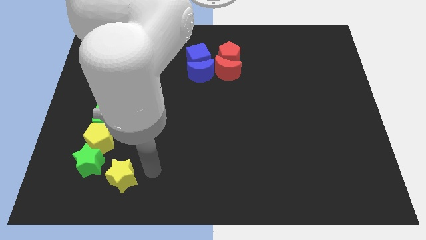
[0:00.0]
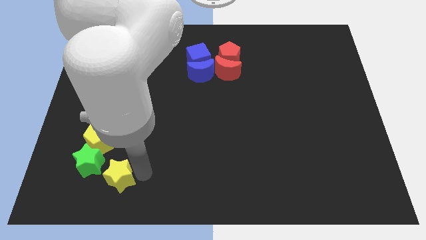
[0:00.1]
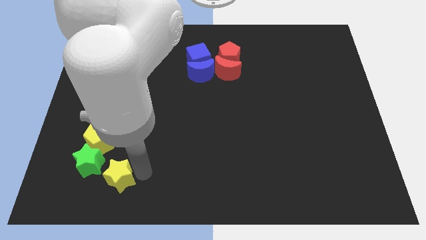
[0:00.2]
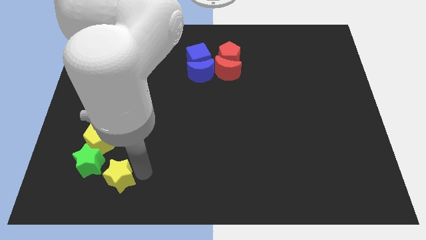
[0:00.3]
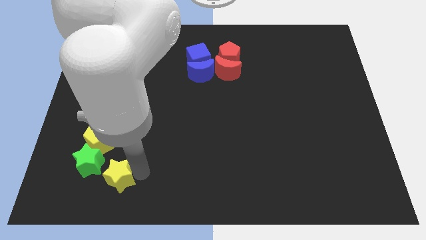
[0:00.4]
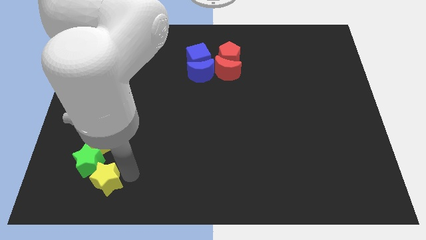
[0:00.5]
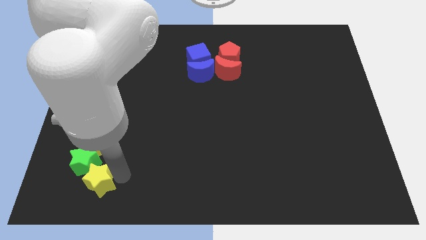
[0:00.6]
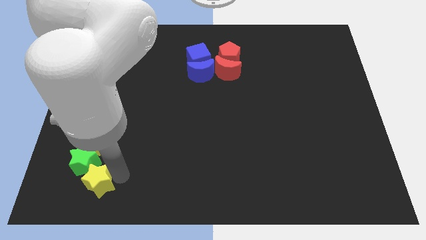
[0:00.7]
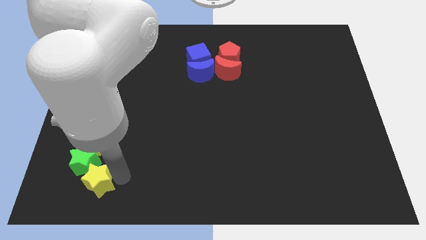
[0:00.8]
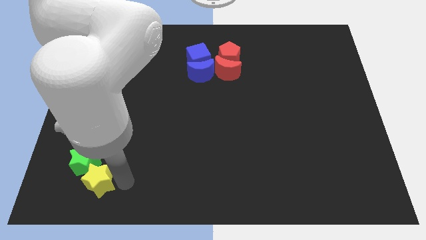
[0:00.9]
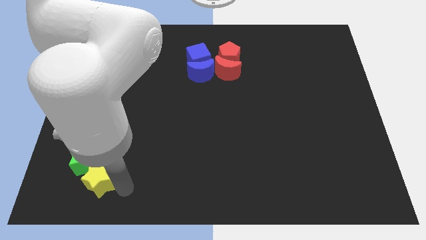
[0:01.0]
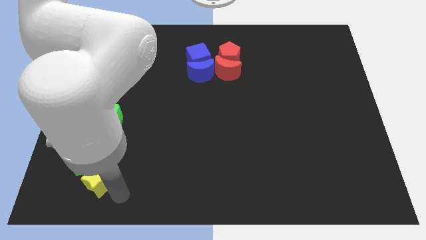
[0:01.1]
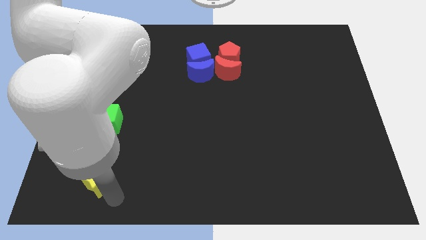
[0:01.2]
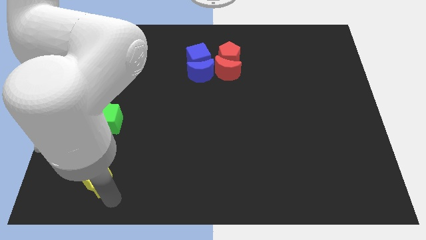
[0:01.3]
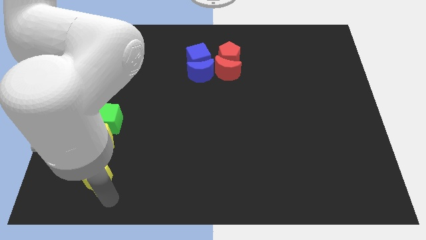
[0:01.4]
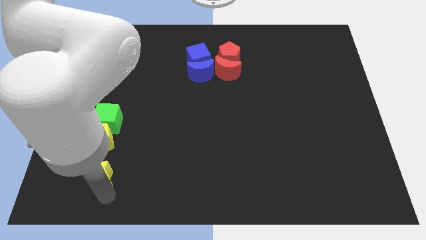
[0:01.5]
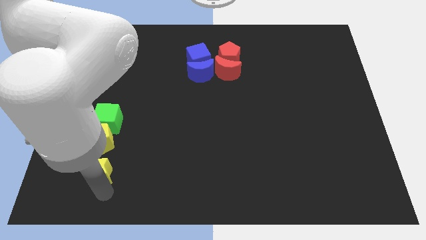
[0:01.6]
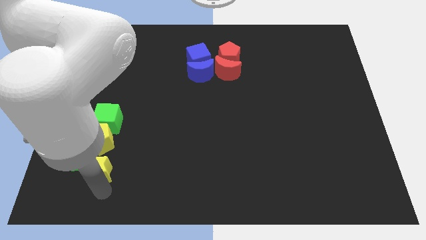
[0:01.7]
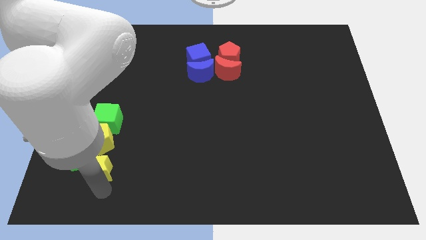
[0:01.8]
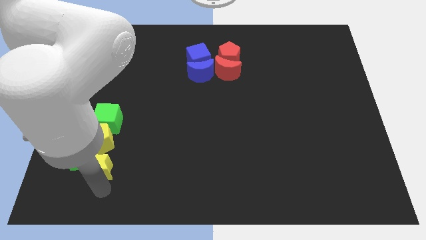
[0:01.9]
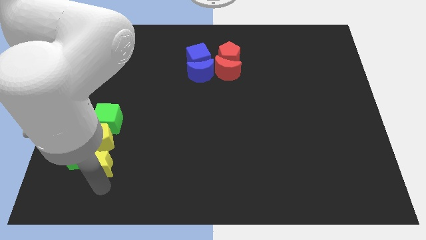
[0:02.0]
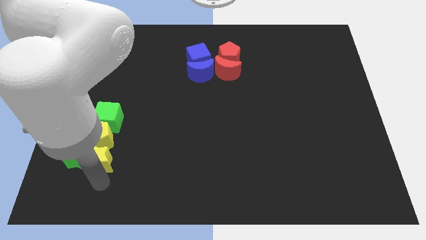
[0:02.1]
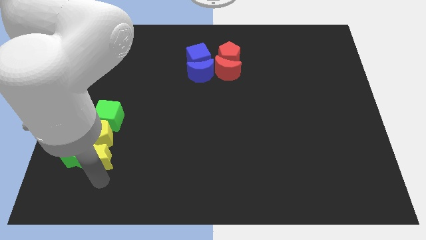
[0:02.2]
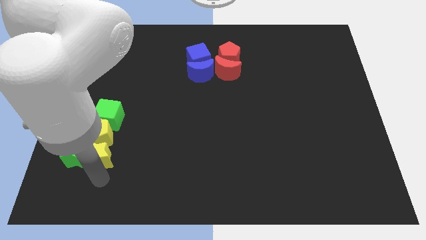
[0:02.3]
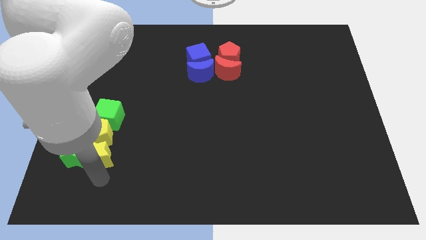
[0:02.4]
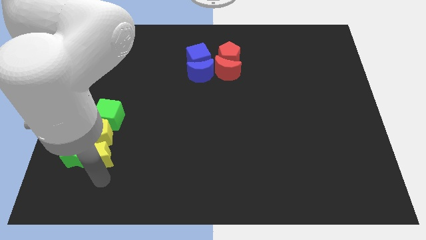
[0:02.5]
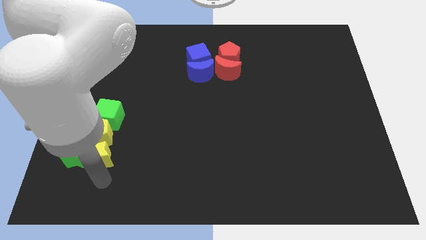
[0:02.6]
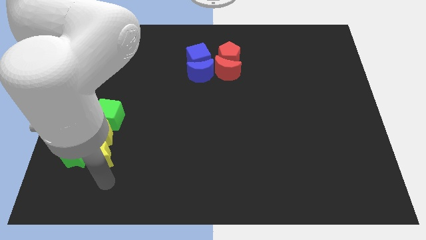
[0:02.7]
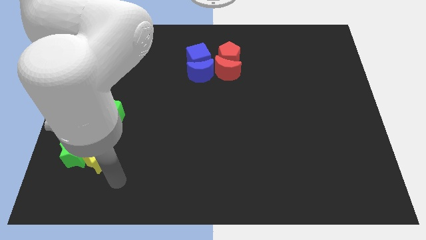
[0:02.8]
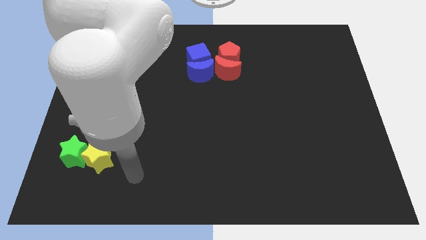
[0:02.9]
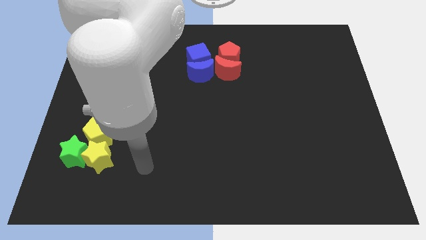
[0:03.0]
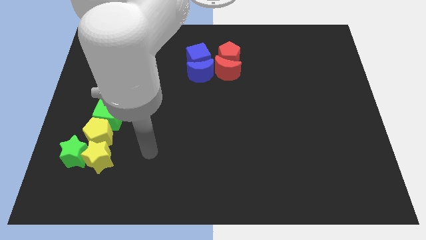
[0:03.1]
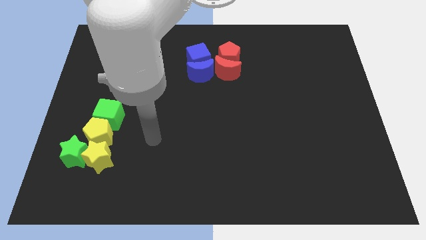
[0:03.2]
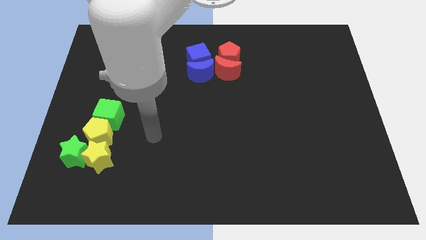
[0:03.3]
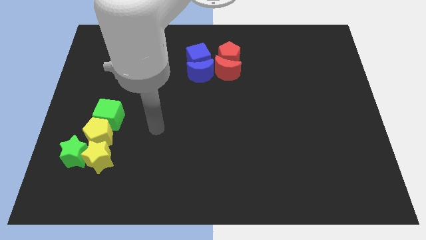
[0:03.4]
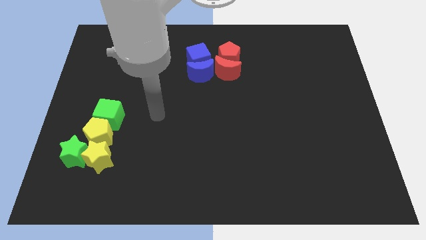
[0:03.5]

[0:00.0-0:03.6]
push the yellow star into green star

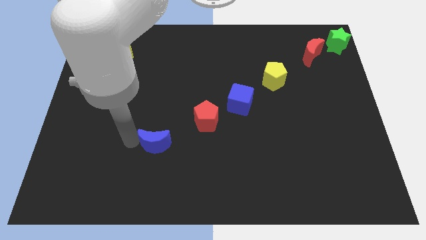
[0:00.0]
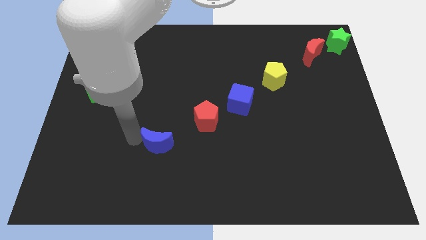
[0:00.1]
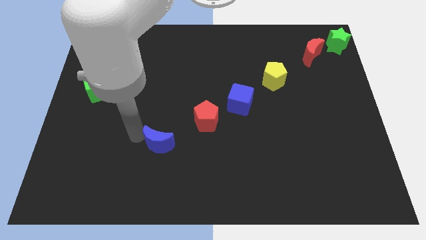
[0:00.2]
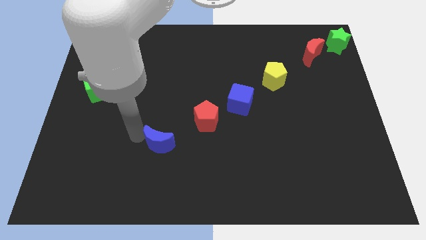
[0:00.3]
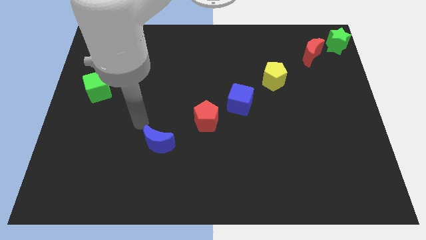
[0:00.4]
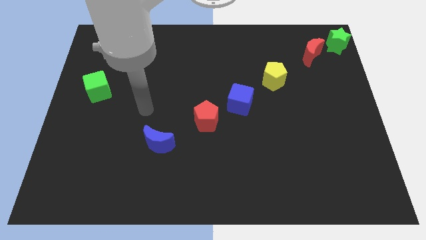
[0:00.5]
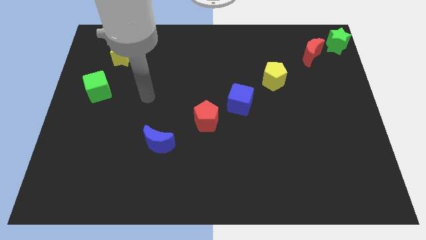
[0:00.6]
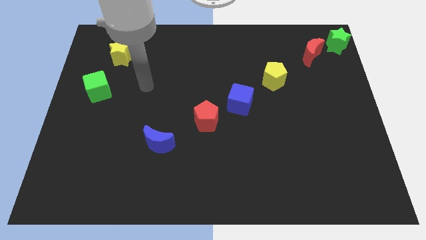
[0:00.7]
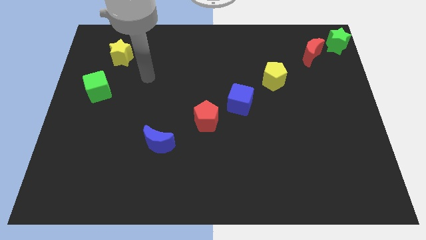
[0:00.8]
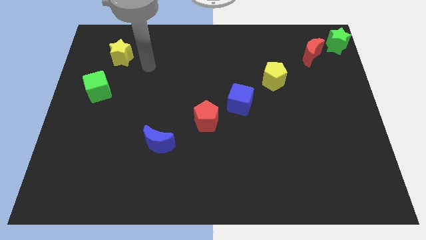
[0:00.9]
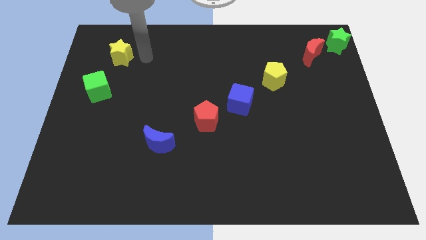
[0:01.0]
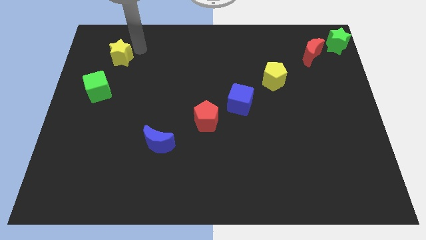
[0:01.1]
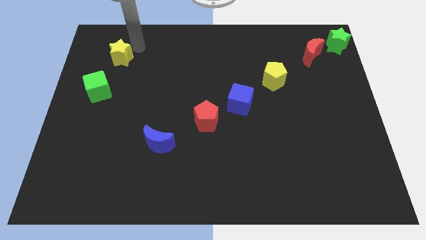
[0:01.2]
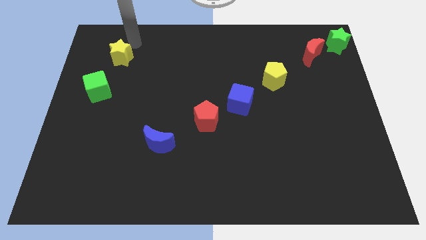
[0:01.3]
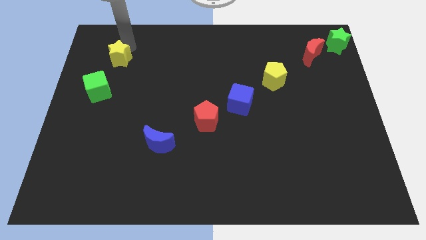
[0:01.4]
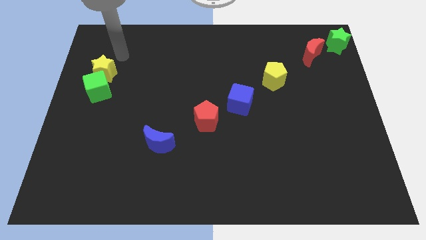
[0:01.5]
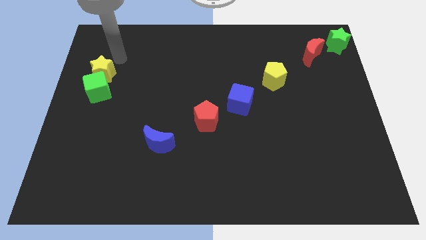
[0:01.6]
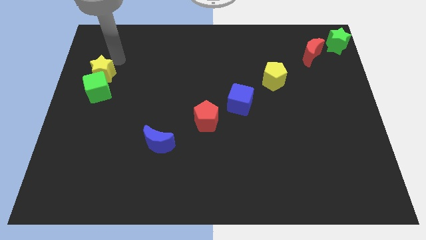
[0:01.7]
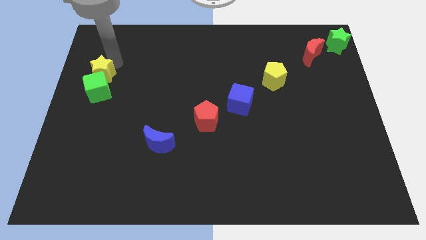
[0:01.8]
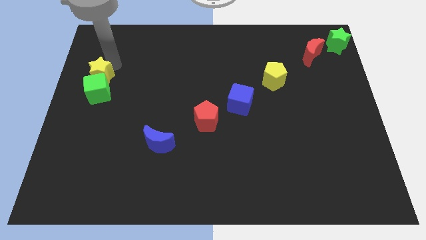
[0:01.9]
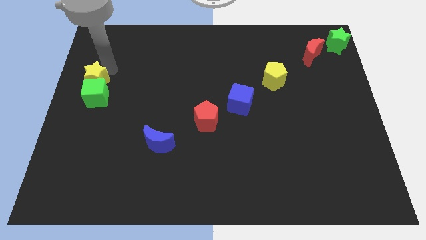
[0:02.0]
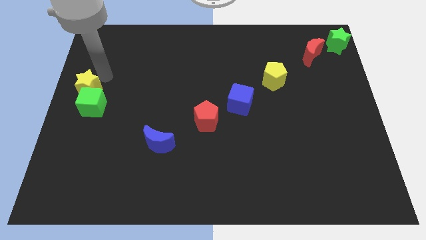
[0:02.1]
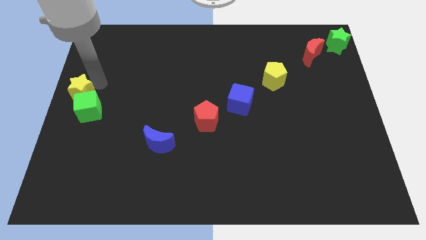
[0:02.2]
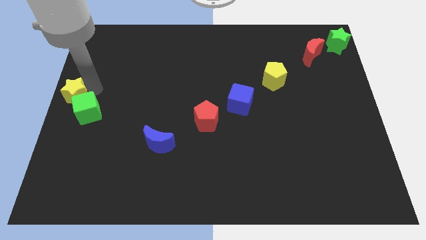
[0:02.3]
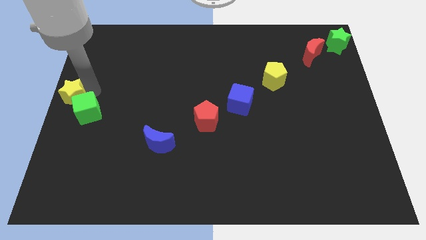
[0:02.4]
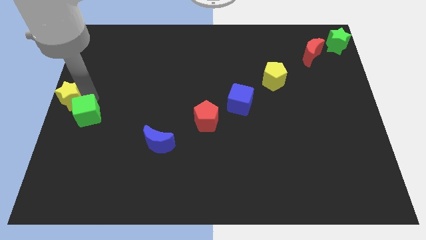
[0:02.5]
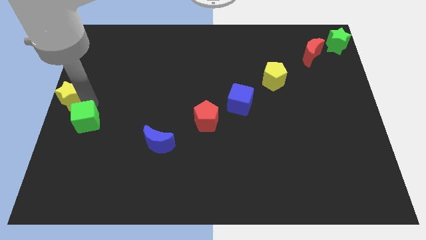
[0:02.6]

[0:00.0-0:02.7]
move the yellow star along with the green cube to the bottom

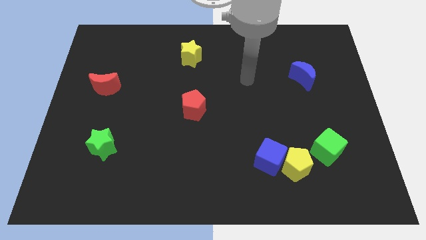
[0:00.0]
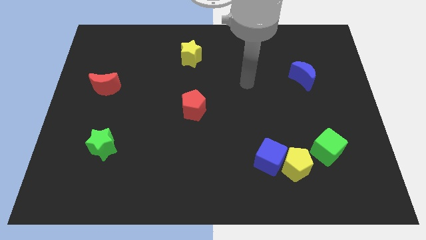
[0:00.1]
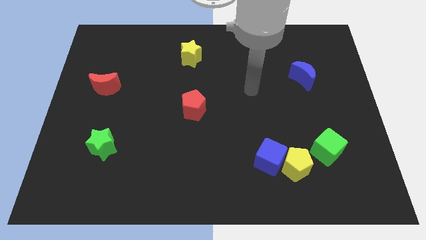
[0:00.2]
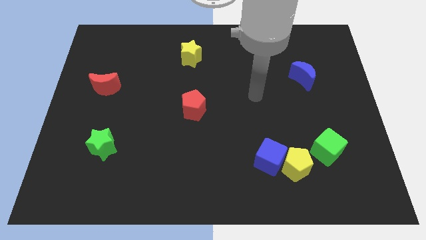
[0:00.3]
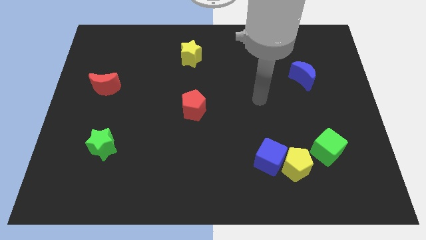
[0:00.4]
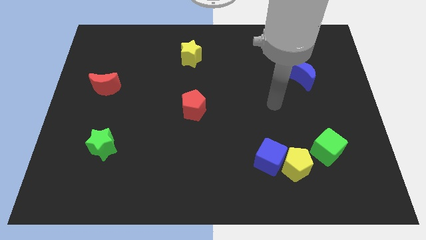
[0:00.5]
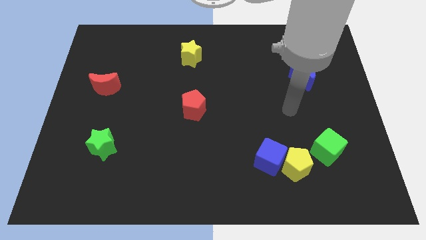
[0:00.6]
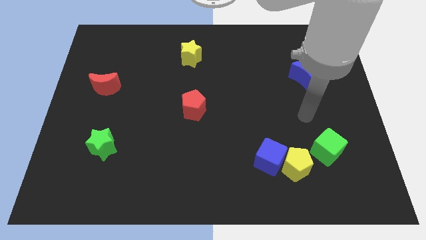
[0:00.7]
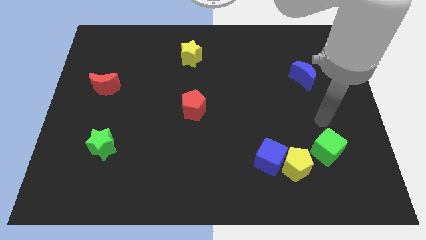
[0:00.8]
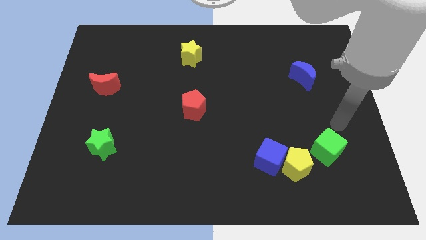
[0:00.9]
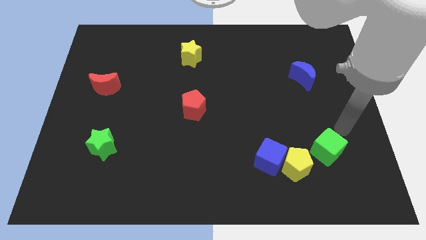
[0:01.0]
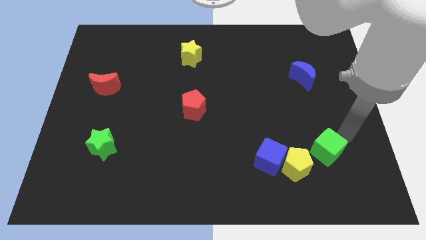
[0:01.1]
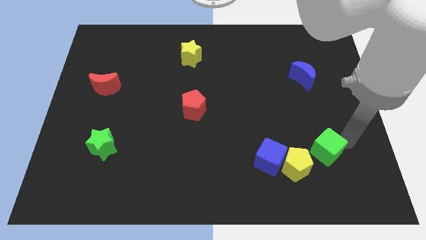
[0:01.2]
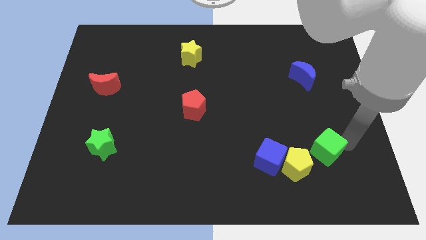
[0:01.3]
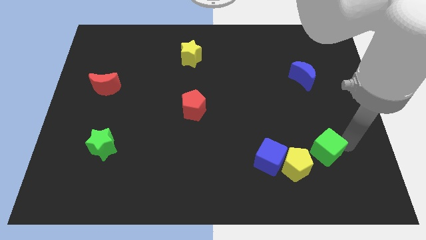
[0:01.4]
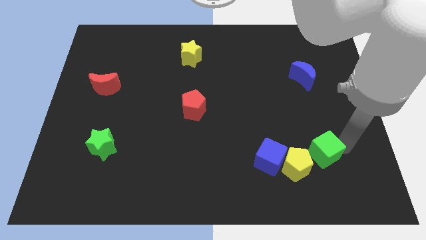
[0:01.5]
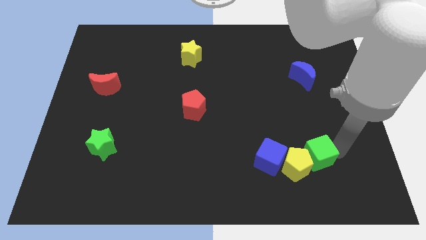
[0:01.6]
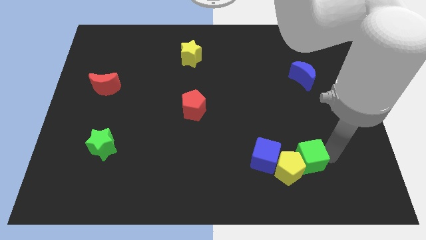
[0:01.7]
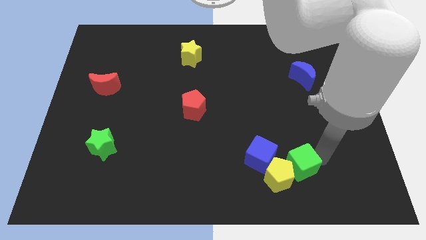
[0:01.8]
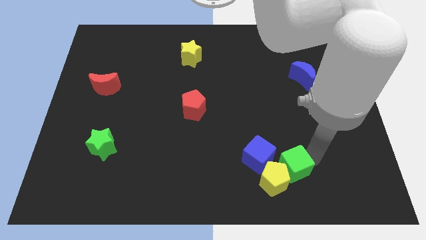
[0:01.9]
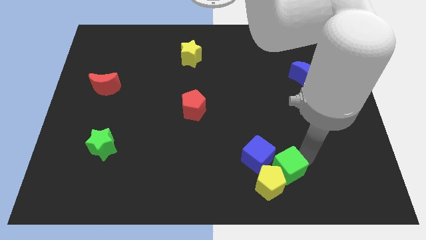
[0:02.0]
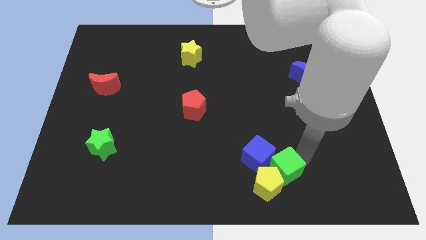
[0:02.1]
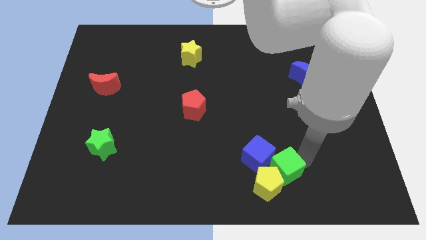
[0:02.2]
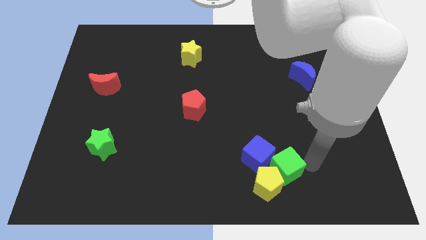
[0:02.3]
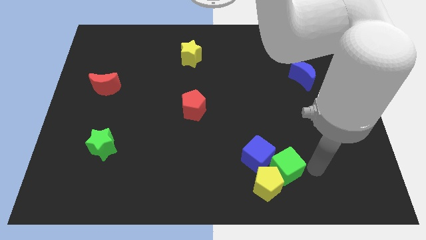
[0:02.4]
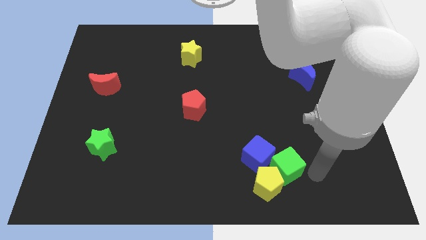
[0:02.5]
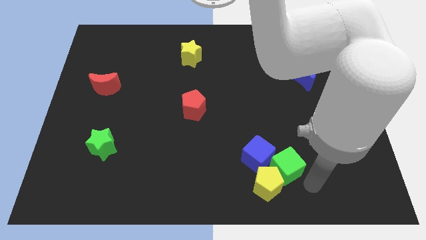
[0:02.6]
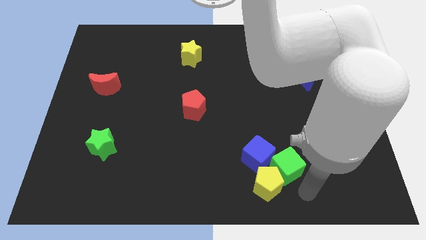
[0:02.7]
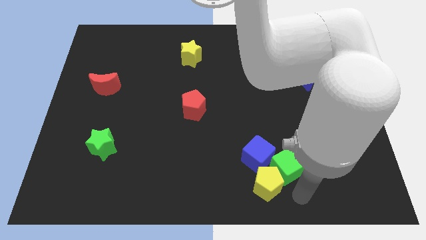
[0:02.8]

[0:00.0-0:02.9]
push the green cube into the yellow pentagon
